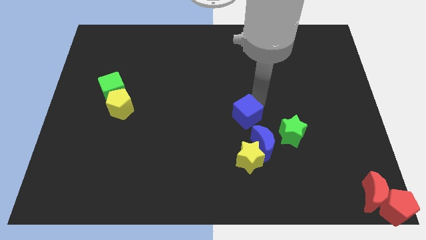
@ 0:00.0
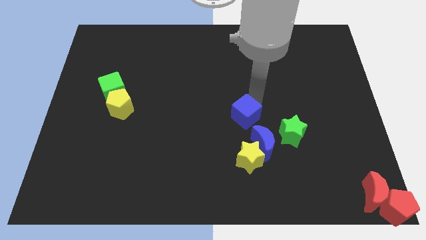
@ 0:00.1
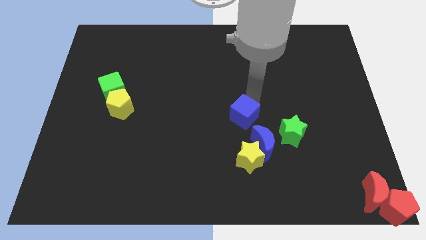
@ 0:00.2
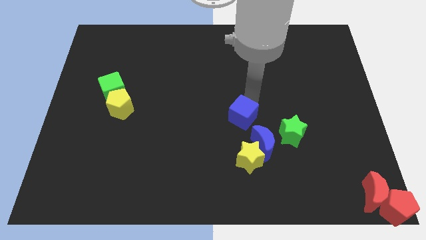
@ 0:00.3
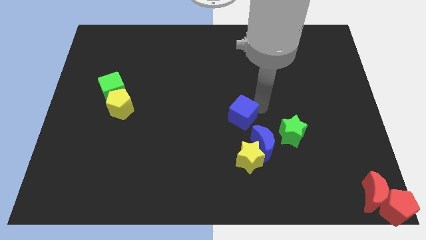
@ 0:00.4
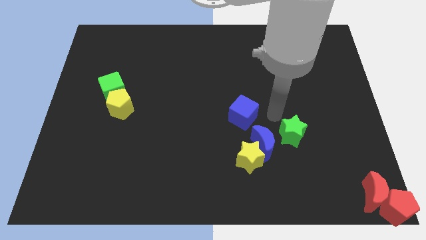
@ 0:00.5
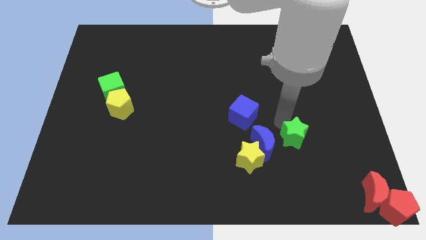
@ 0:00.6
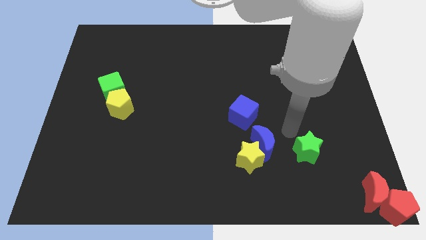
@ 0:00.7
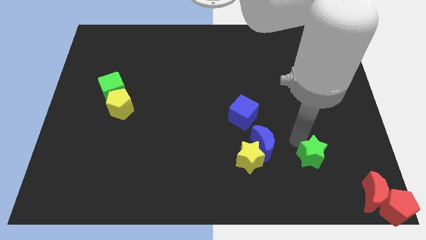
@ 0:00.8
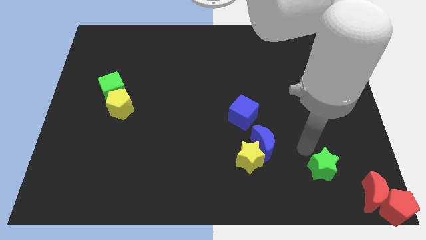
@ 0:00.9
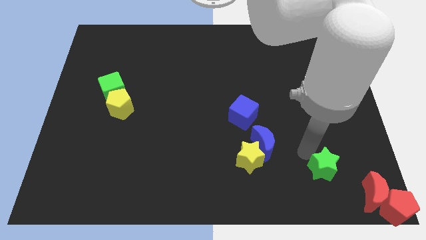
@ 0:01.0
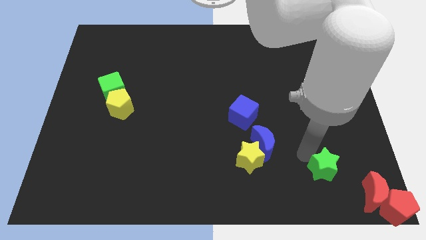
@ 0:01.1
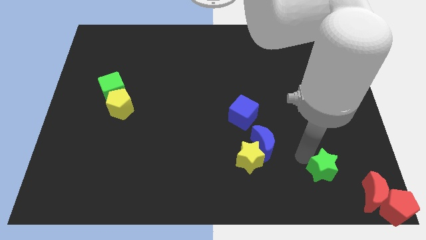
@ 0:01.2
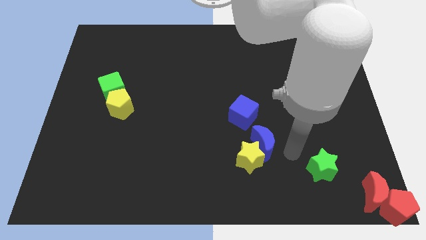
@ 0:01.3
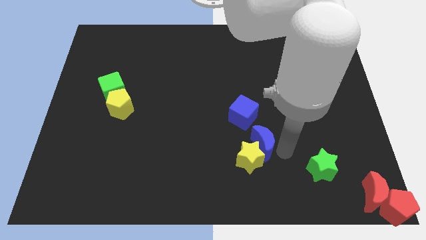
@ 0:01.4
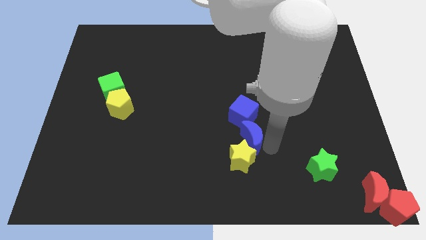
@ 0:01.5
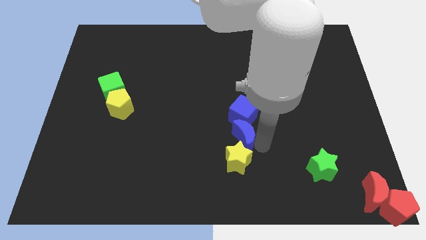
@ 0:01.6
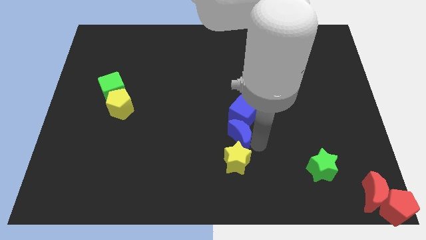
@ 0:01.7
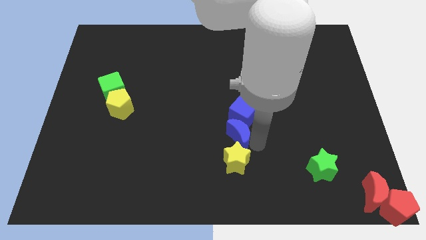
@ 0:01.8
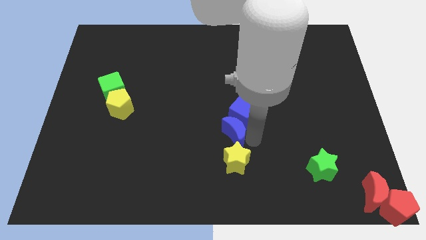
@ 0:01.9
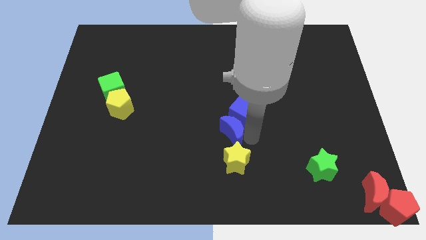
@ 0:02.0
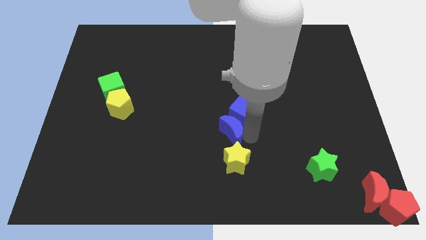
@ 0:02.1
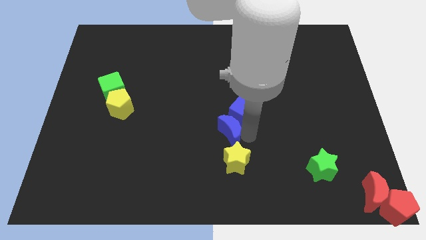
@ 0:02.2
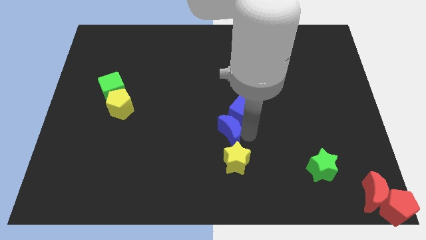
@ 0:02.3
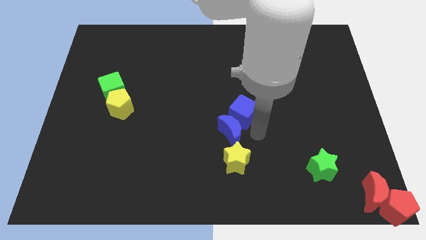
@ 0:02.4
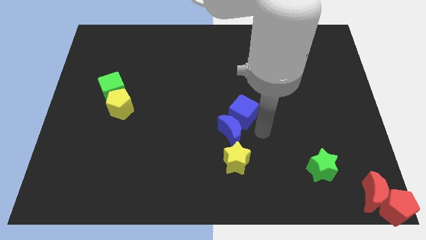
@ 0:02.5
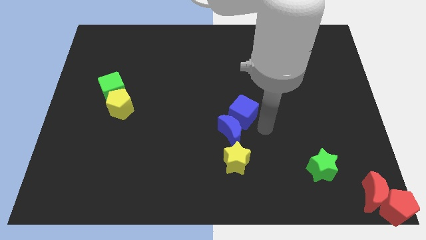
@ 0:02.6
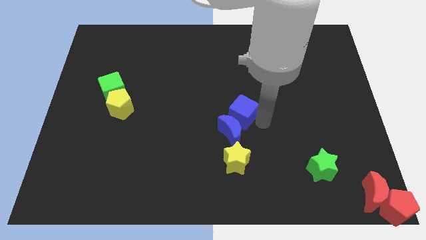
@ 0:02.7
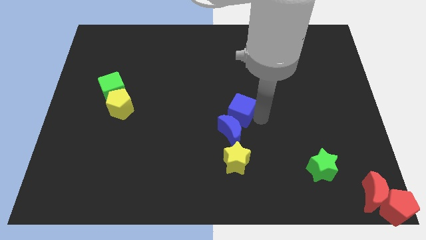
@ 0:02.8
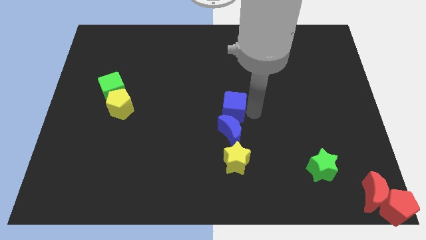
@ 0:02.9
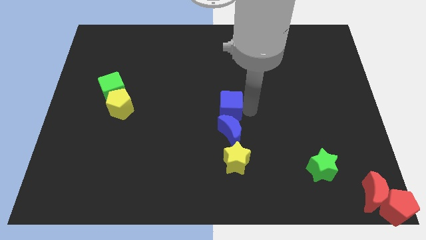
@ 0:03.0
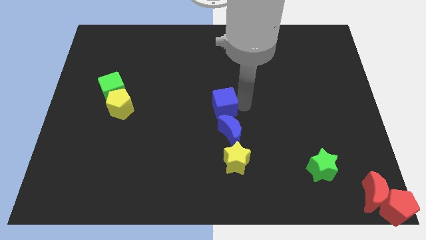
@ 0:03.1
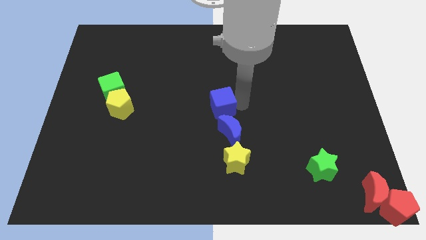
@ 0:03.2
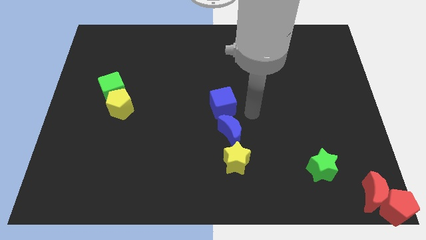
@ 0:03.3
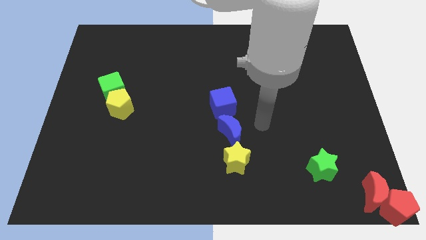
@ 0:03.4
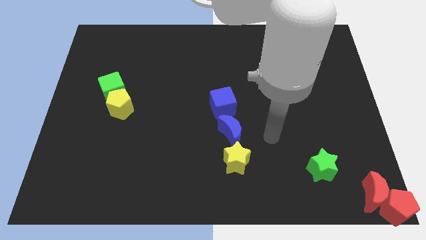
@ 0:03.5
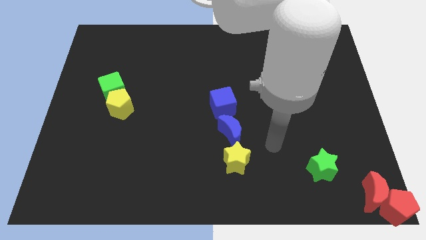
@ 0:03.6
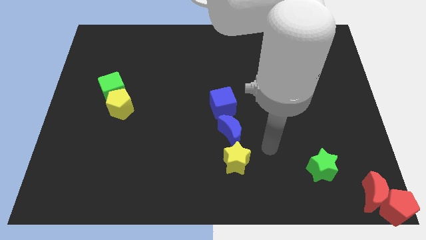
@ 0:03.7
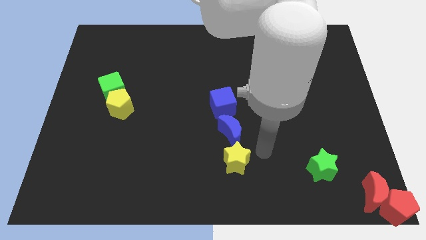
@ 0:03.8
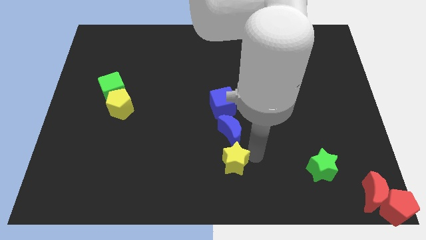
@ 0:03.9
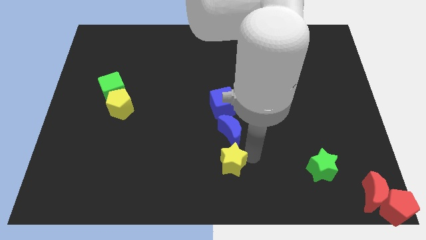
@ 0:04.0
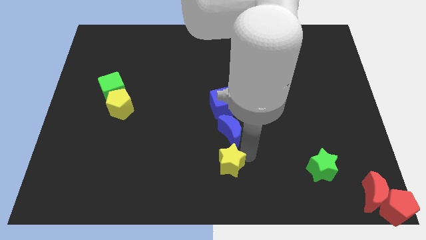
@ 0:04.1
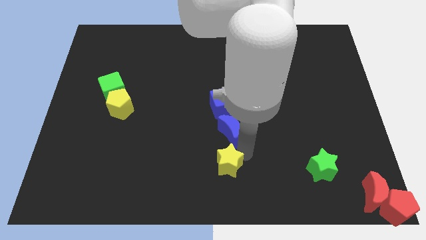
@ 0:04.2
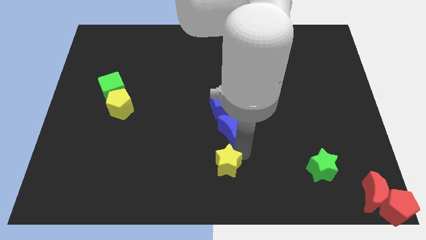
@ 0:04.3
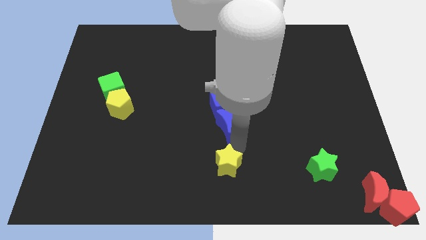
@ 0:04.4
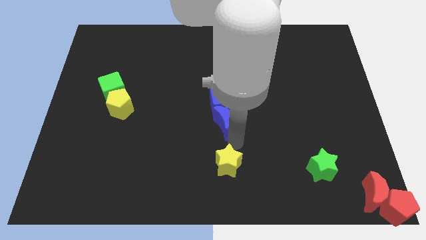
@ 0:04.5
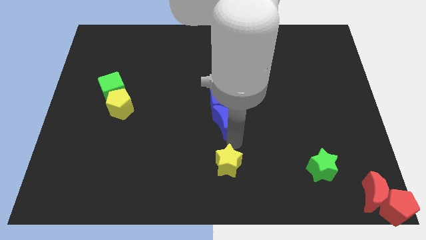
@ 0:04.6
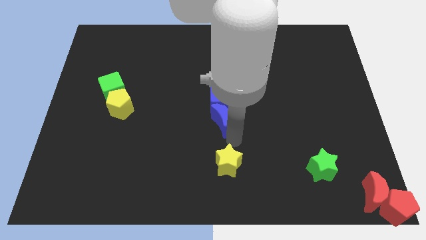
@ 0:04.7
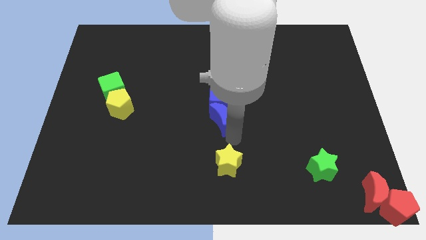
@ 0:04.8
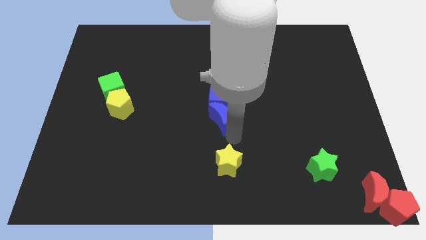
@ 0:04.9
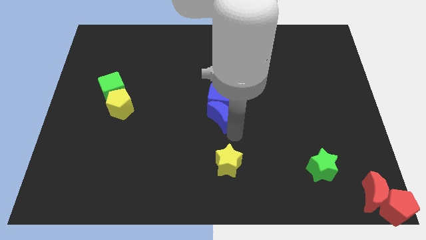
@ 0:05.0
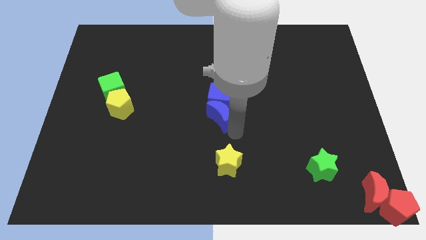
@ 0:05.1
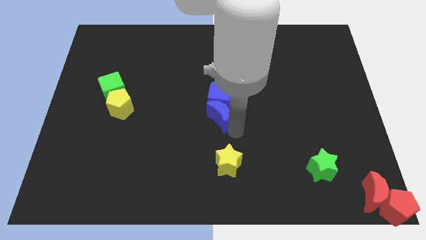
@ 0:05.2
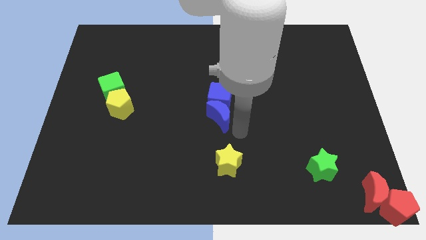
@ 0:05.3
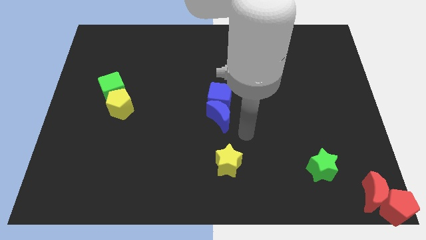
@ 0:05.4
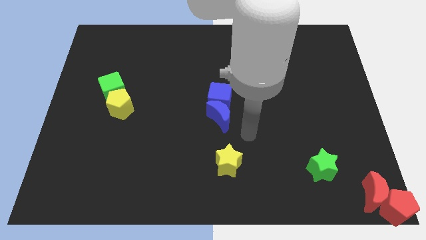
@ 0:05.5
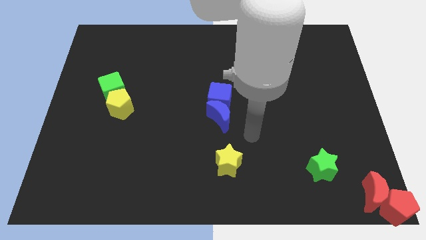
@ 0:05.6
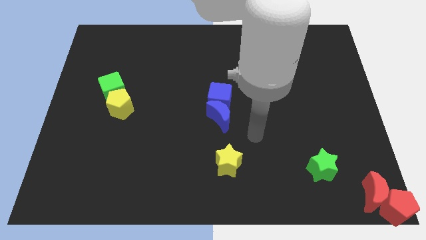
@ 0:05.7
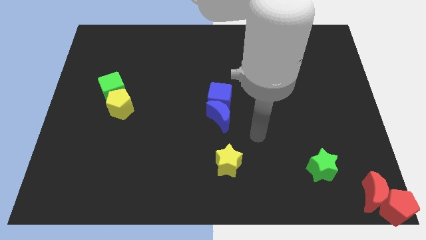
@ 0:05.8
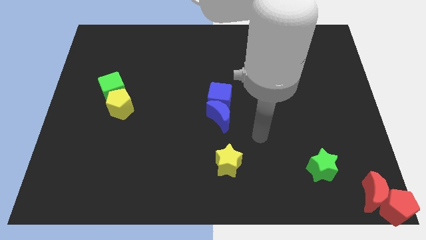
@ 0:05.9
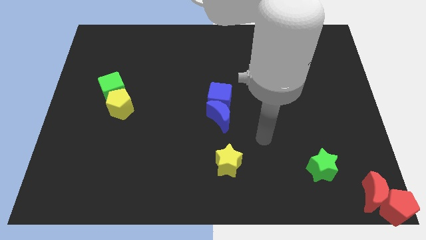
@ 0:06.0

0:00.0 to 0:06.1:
move the blue cube and blue crescent to the center of the board

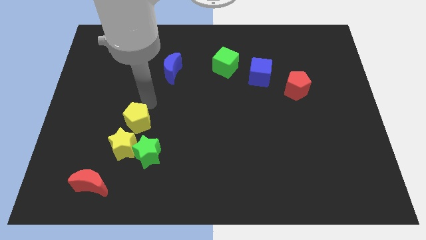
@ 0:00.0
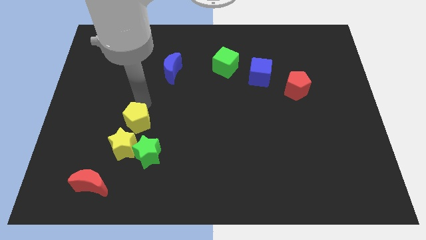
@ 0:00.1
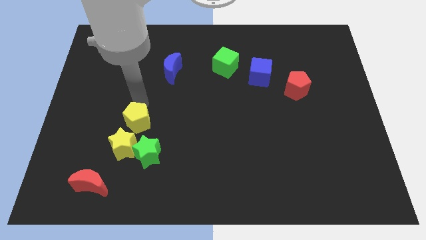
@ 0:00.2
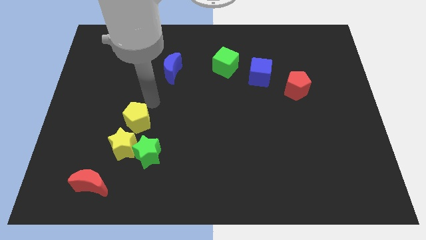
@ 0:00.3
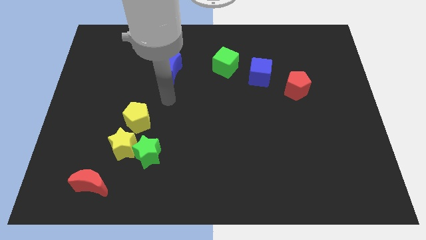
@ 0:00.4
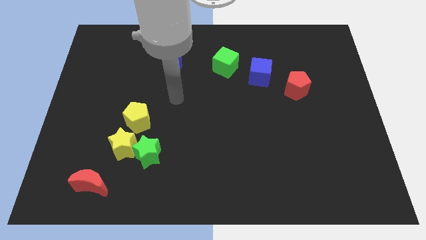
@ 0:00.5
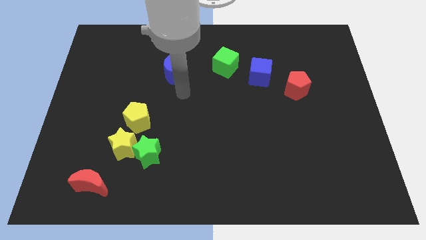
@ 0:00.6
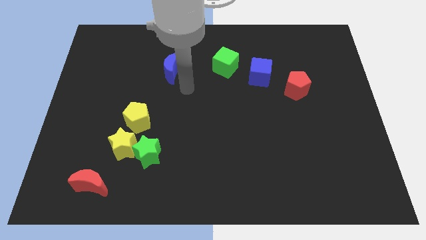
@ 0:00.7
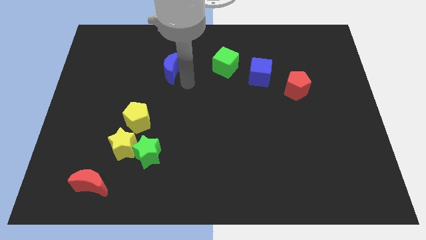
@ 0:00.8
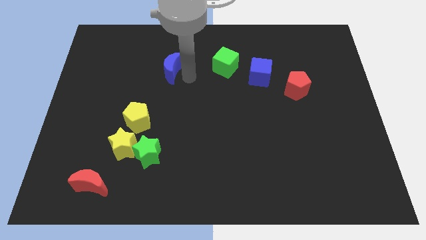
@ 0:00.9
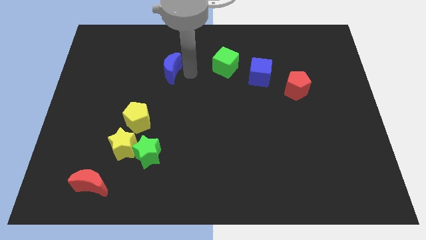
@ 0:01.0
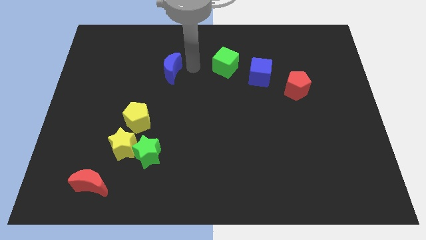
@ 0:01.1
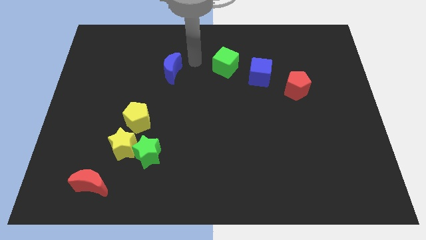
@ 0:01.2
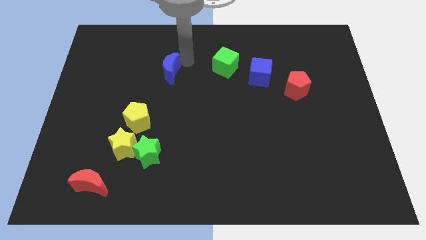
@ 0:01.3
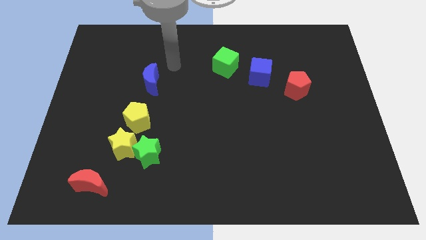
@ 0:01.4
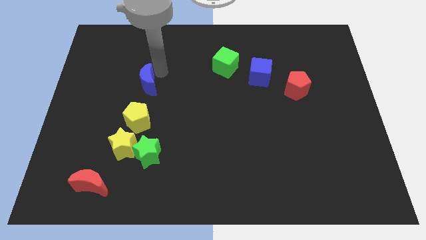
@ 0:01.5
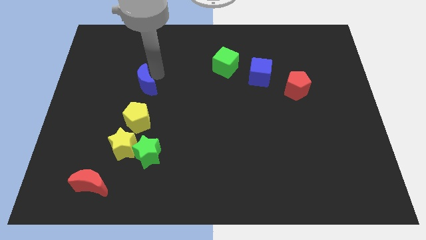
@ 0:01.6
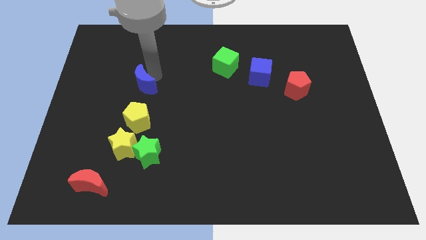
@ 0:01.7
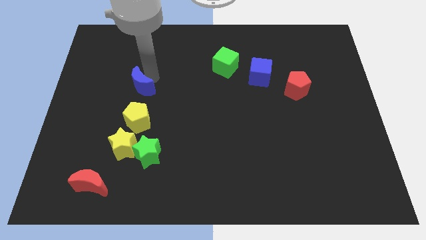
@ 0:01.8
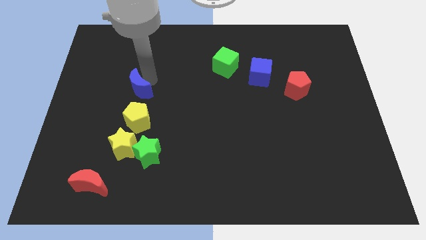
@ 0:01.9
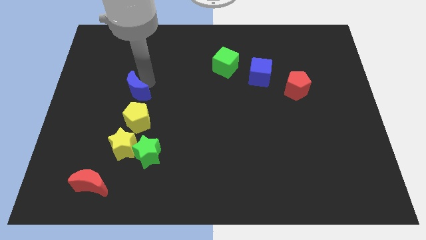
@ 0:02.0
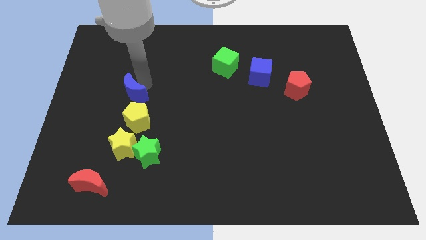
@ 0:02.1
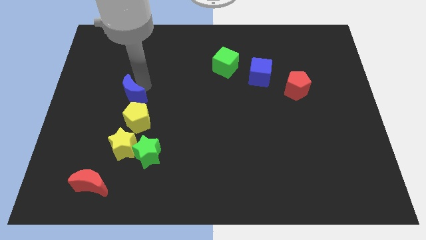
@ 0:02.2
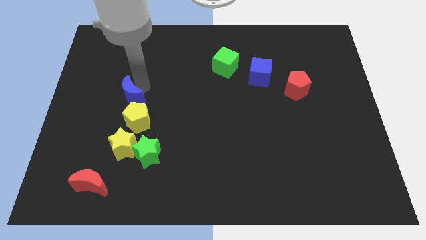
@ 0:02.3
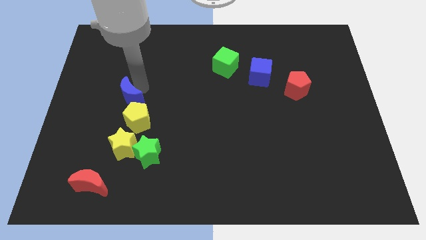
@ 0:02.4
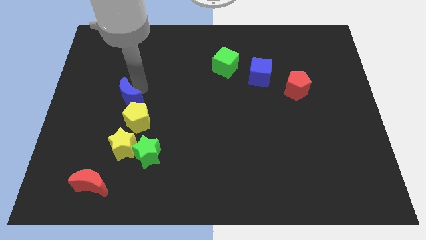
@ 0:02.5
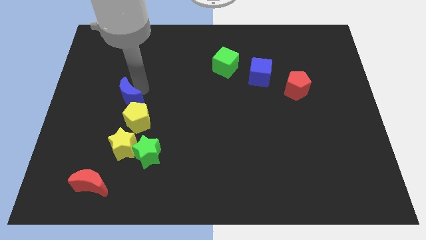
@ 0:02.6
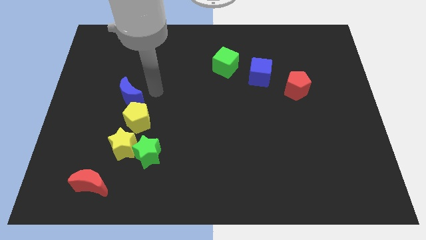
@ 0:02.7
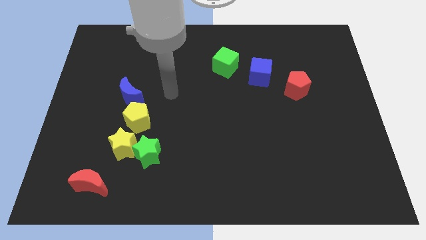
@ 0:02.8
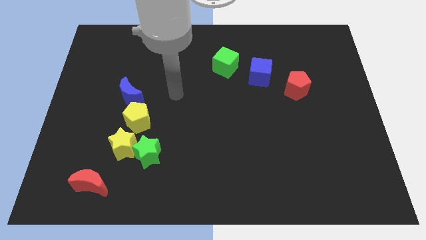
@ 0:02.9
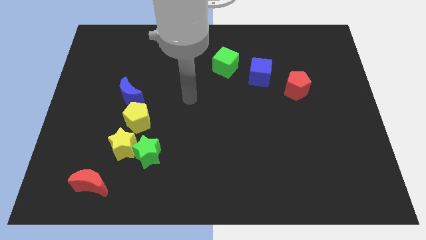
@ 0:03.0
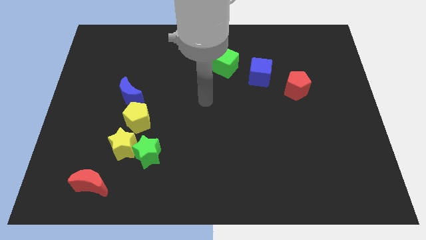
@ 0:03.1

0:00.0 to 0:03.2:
place the blue moon above the yellow pentagon
